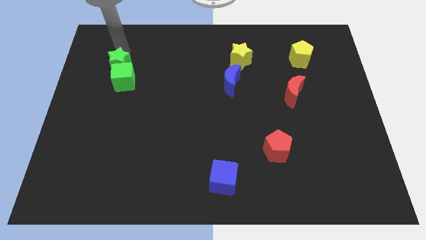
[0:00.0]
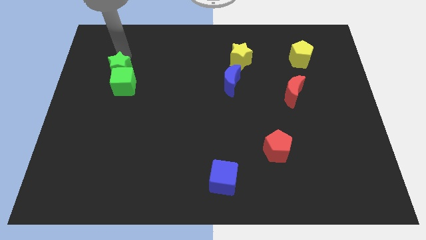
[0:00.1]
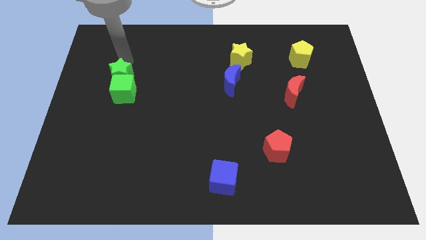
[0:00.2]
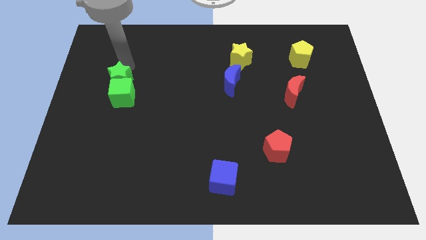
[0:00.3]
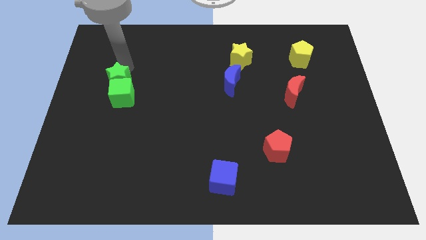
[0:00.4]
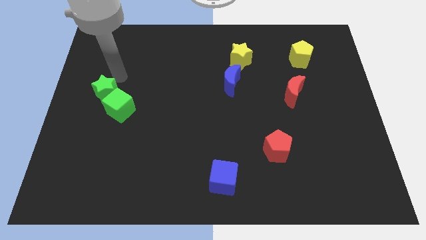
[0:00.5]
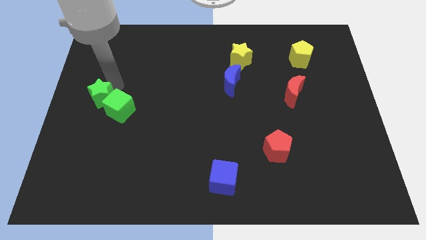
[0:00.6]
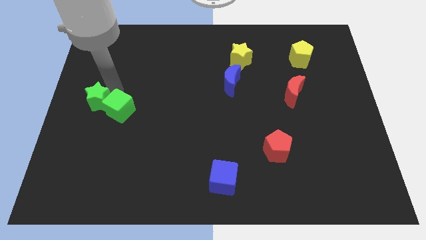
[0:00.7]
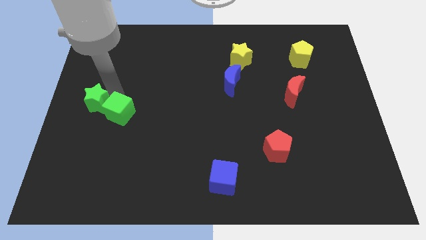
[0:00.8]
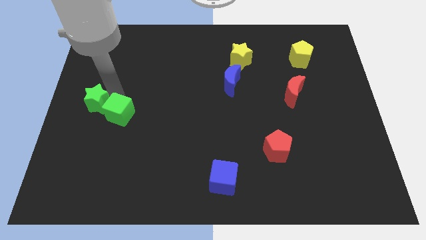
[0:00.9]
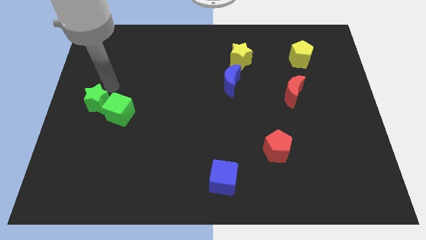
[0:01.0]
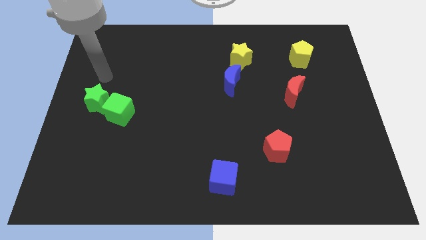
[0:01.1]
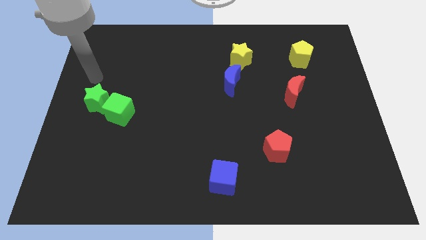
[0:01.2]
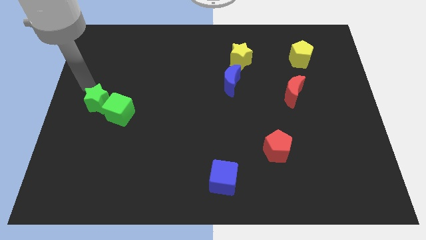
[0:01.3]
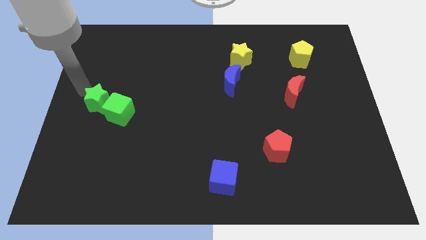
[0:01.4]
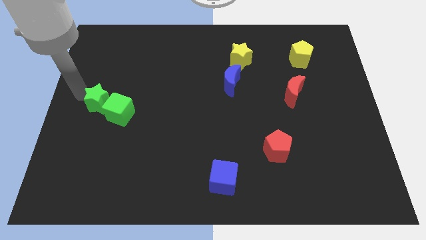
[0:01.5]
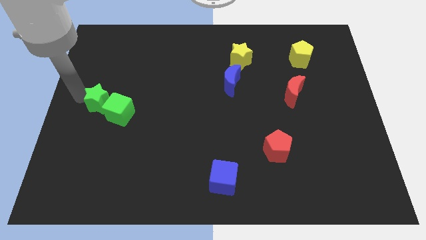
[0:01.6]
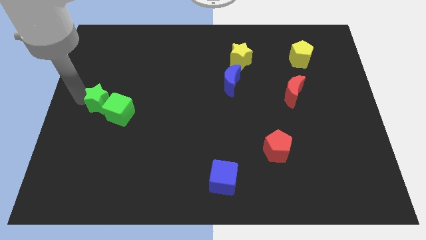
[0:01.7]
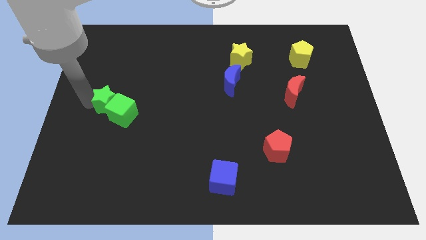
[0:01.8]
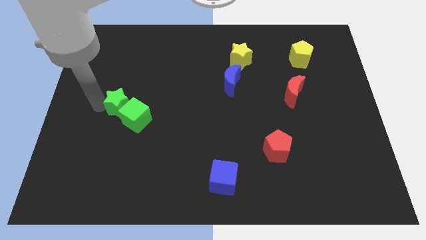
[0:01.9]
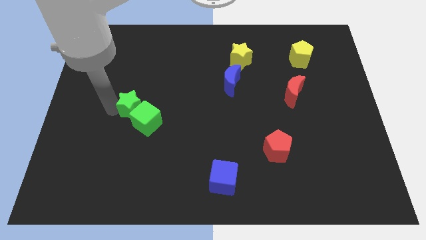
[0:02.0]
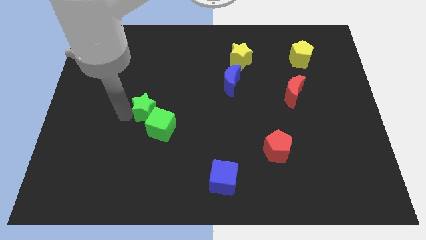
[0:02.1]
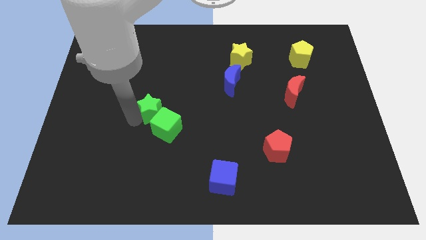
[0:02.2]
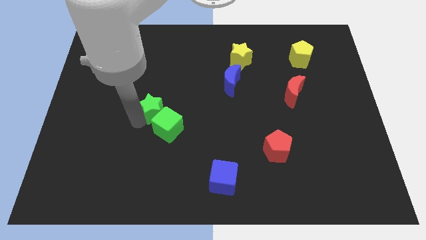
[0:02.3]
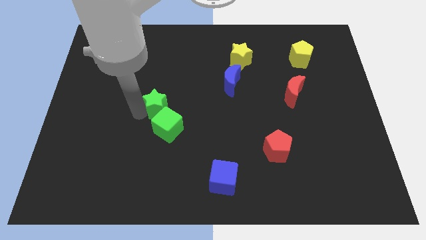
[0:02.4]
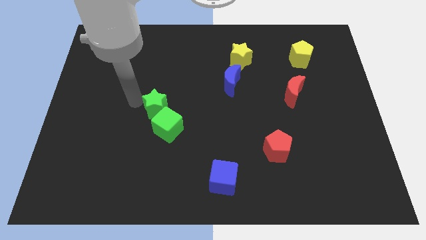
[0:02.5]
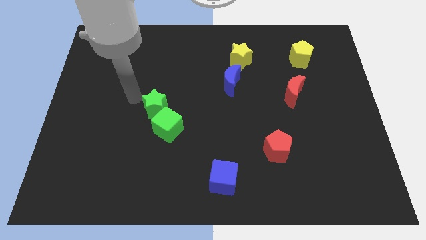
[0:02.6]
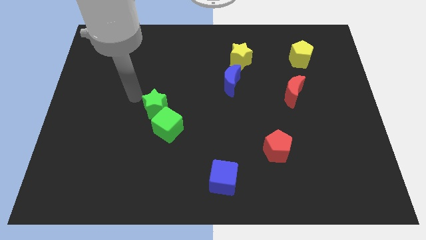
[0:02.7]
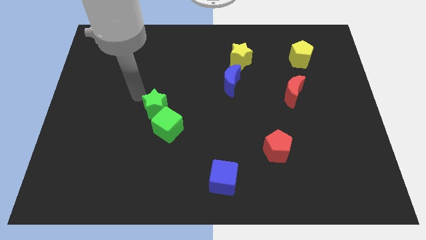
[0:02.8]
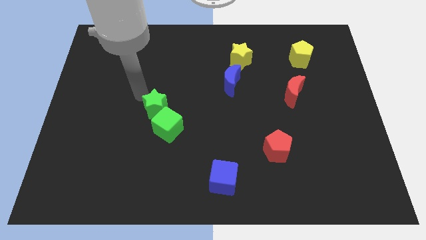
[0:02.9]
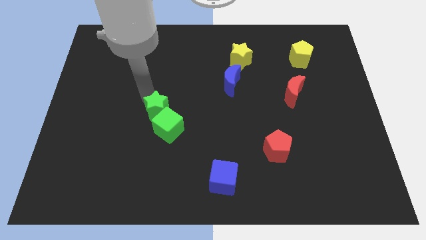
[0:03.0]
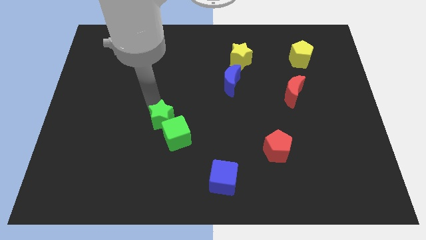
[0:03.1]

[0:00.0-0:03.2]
move the green blocks diagonally to the bottom left of the blue crescent

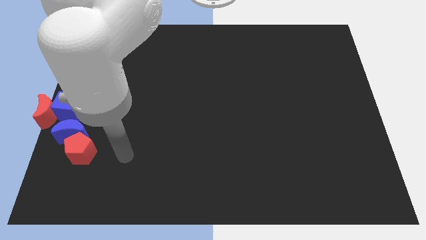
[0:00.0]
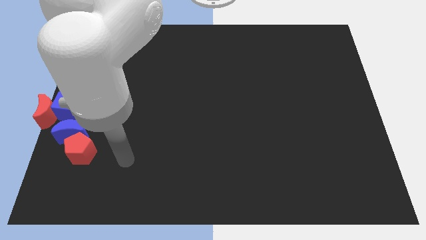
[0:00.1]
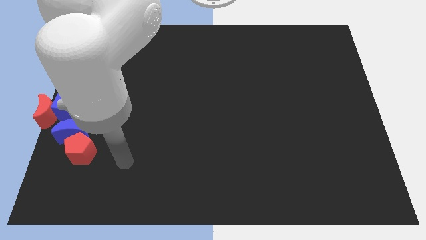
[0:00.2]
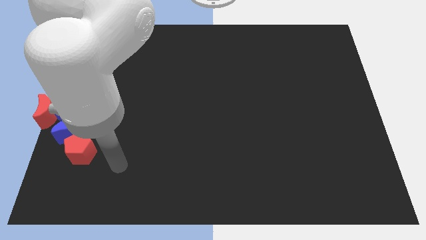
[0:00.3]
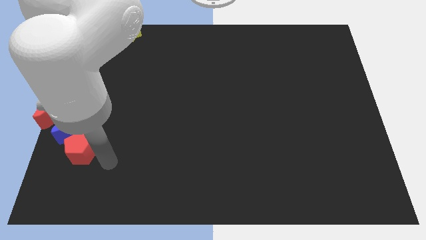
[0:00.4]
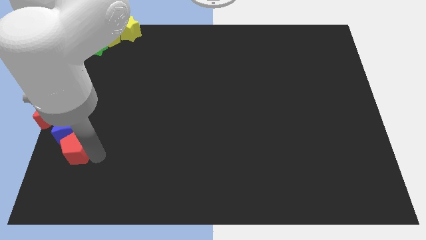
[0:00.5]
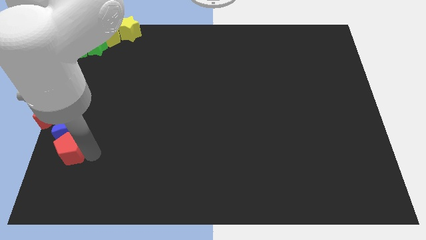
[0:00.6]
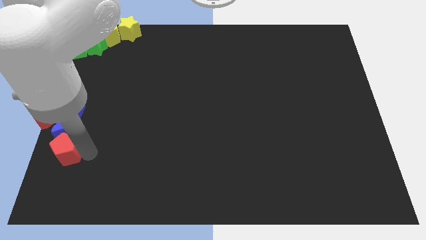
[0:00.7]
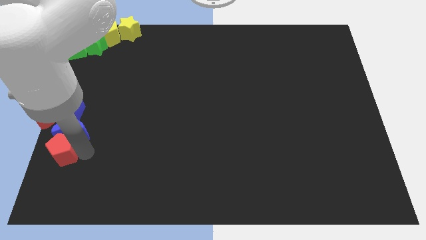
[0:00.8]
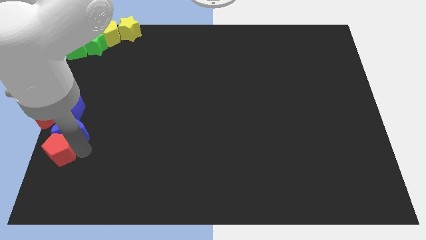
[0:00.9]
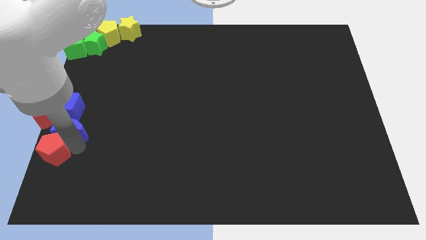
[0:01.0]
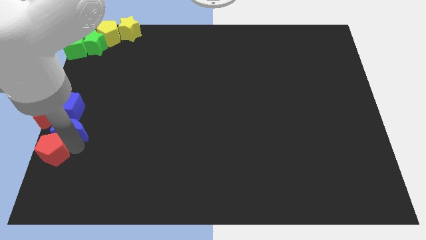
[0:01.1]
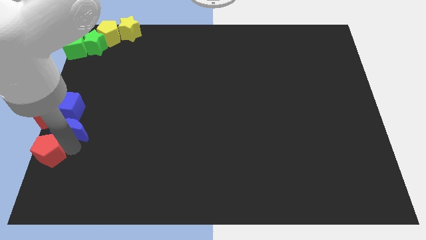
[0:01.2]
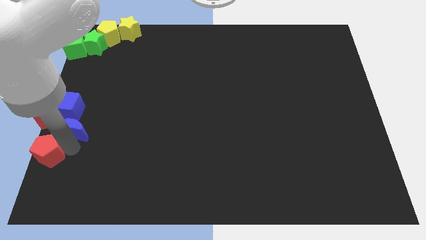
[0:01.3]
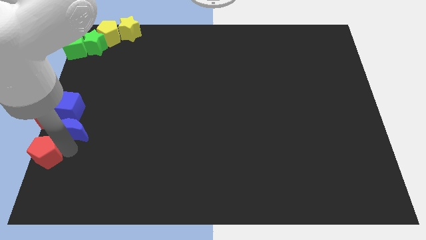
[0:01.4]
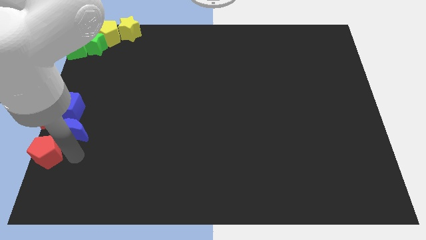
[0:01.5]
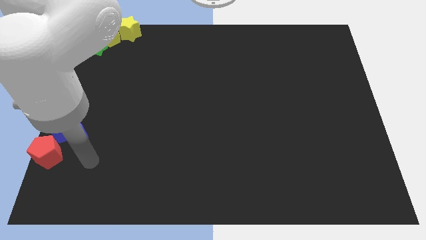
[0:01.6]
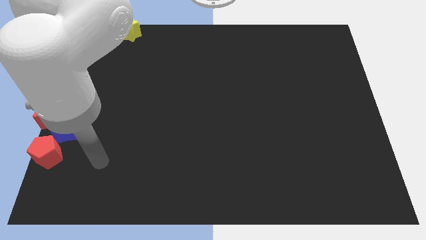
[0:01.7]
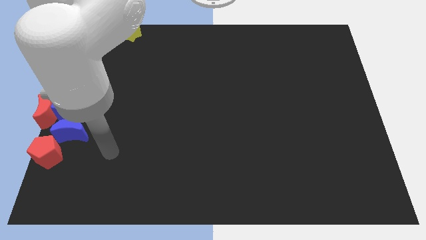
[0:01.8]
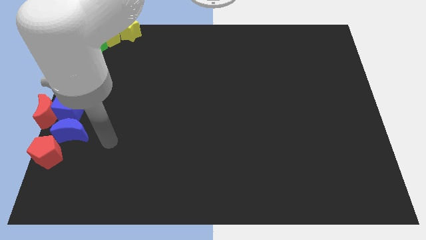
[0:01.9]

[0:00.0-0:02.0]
push the red pentagon near to the bottom left corner

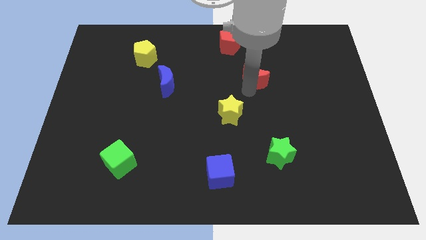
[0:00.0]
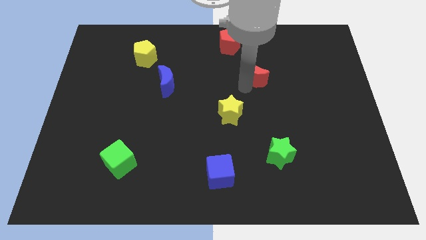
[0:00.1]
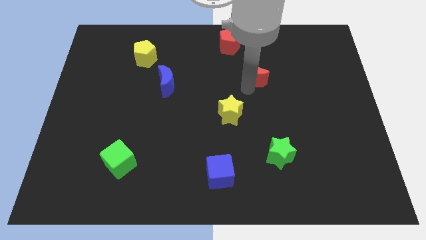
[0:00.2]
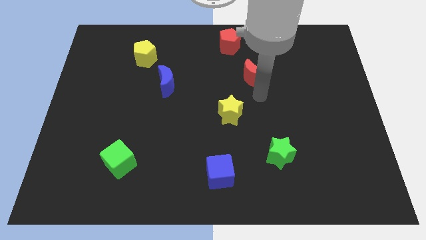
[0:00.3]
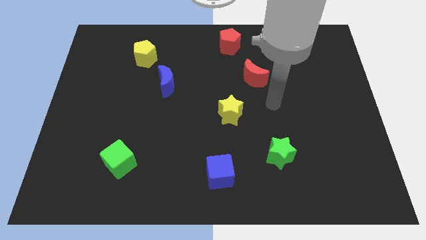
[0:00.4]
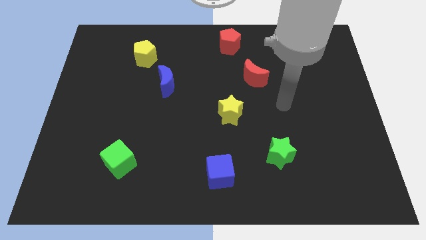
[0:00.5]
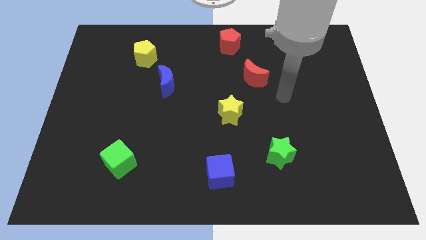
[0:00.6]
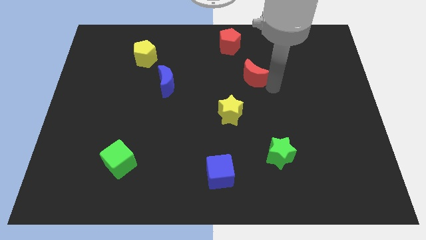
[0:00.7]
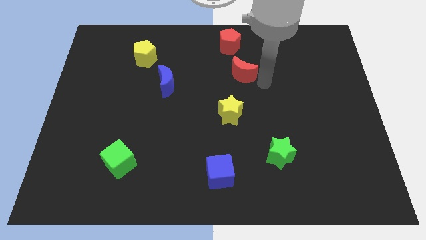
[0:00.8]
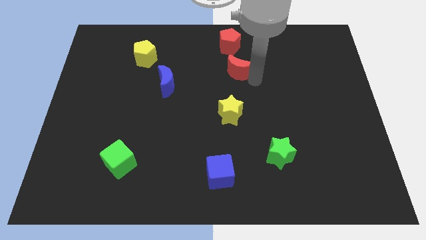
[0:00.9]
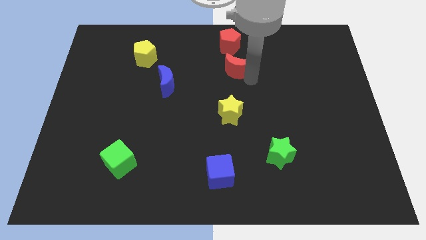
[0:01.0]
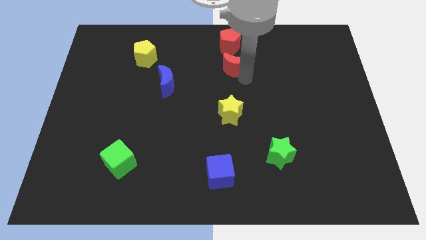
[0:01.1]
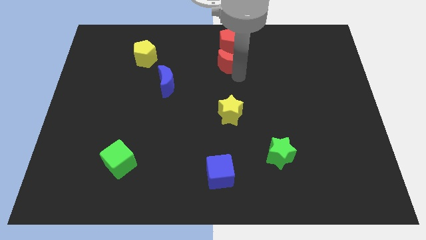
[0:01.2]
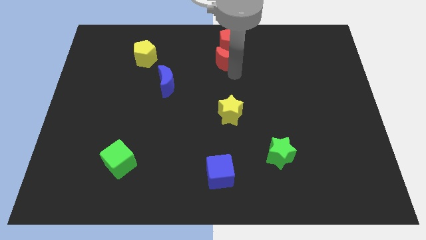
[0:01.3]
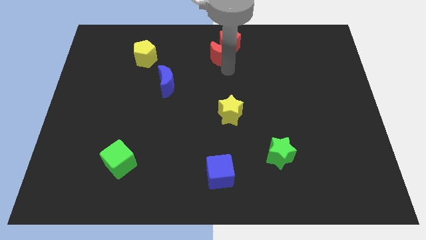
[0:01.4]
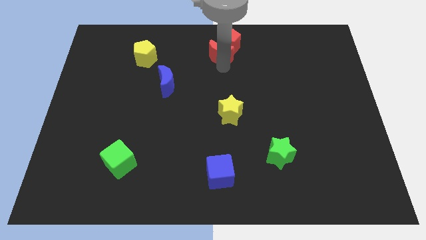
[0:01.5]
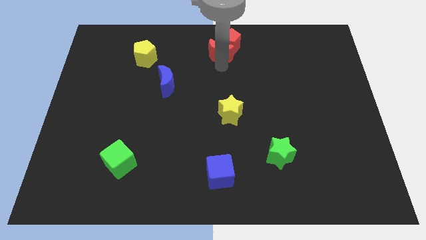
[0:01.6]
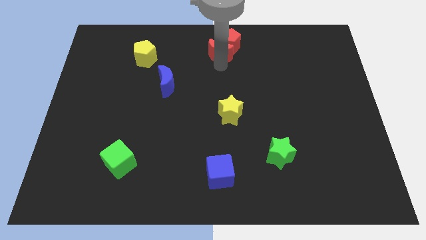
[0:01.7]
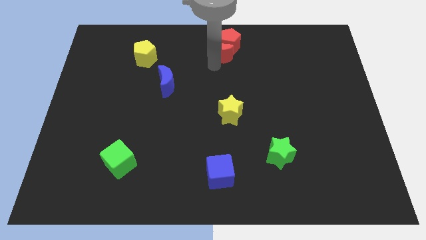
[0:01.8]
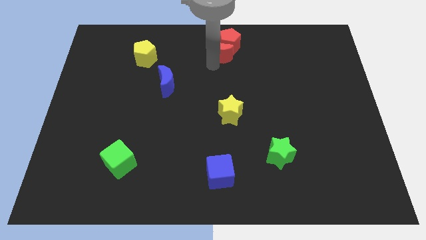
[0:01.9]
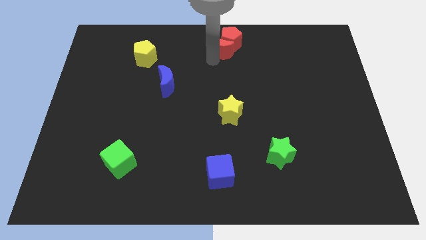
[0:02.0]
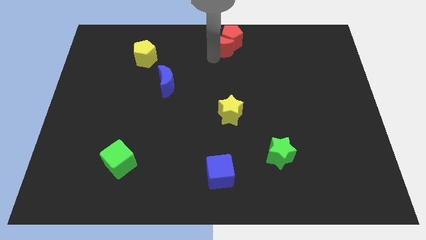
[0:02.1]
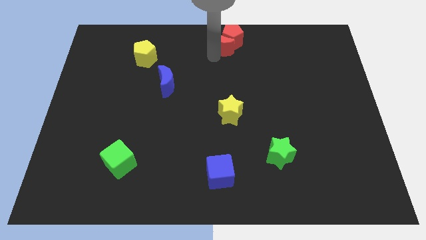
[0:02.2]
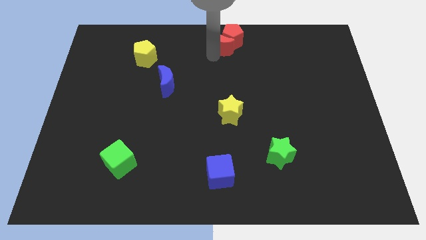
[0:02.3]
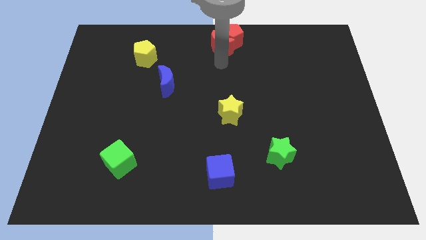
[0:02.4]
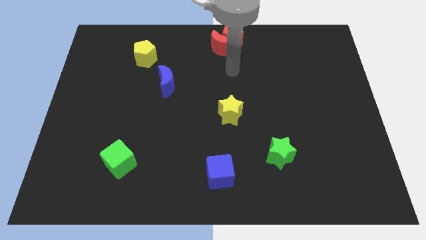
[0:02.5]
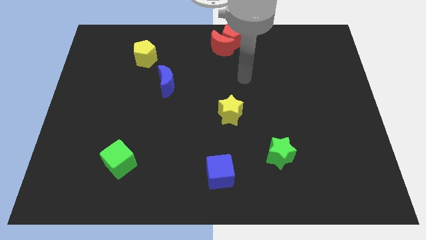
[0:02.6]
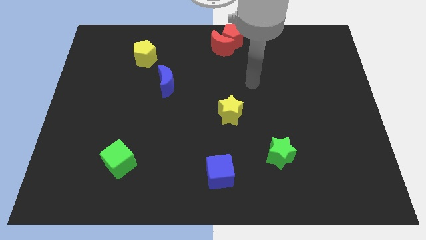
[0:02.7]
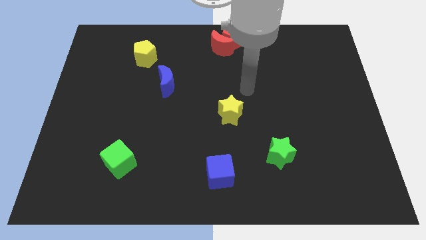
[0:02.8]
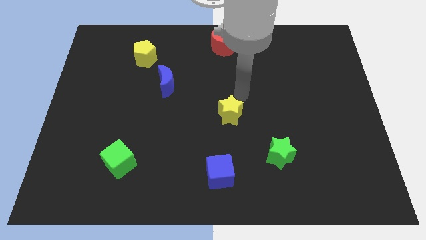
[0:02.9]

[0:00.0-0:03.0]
push red moon in to red pentagon

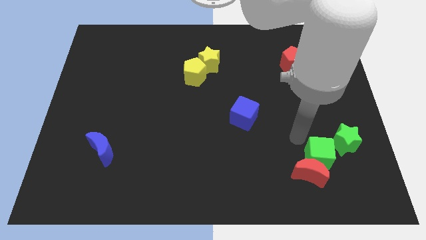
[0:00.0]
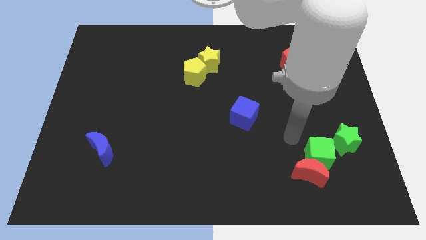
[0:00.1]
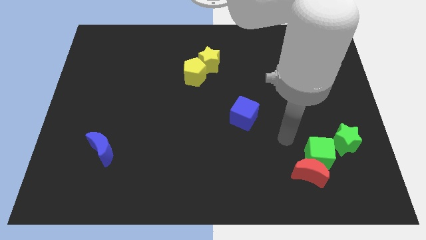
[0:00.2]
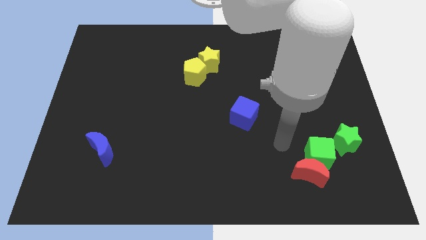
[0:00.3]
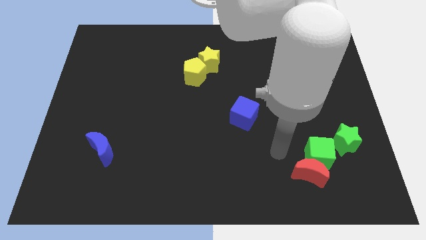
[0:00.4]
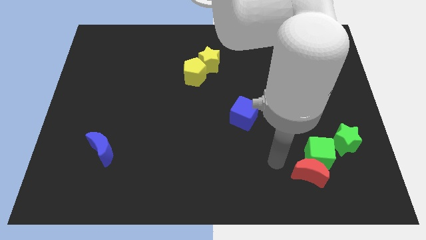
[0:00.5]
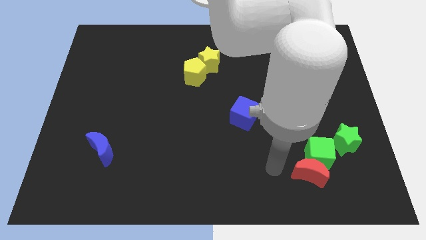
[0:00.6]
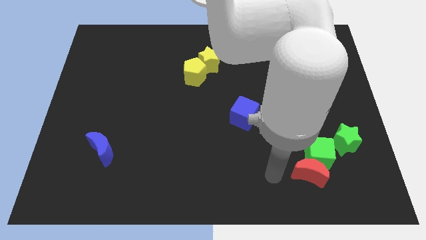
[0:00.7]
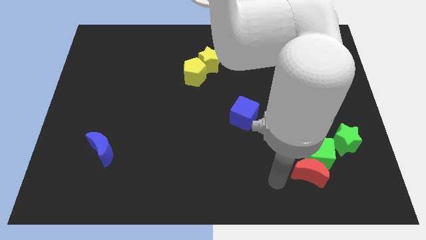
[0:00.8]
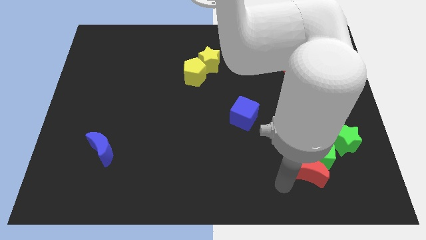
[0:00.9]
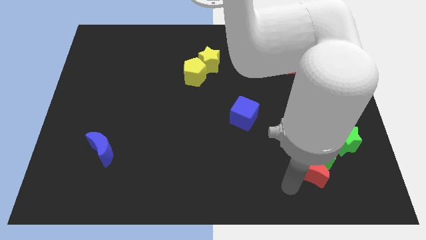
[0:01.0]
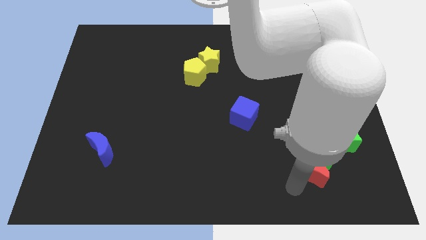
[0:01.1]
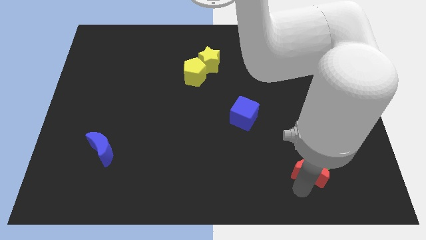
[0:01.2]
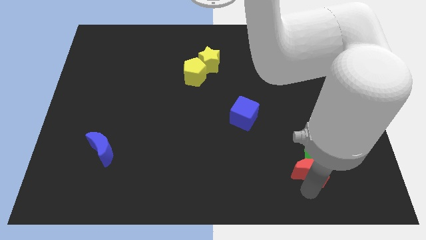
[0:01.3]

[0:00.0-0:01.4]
put your arm at the bottom of the red moon
